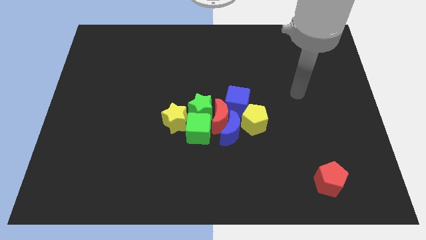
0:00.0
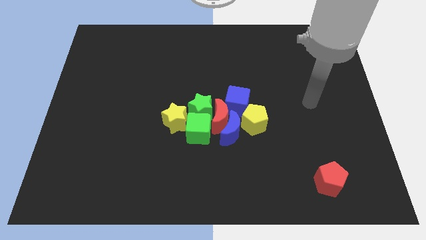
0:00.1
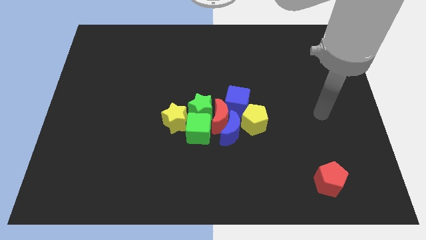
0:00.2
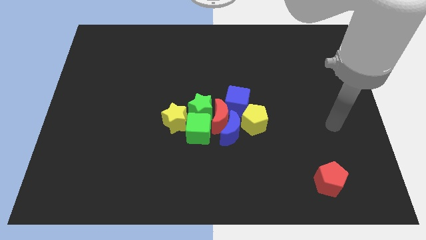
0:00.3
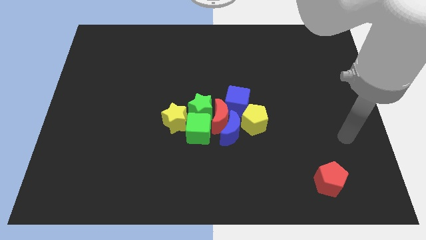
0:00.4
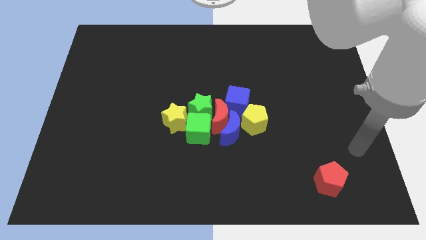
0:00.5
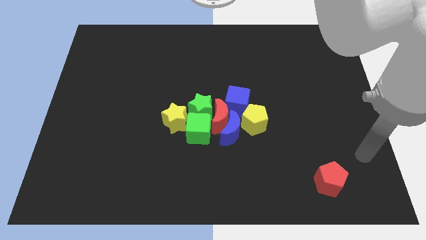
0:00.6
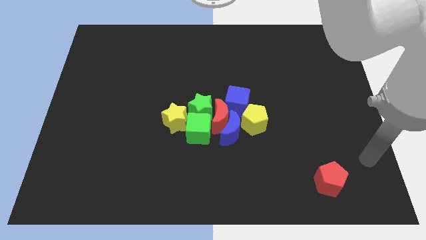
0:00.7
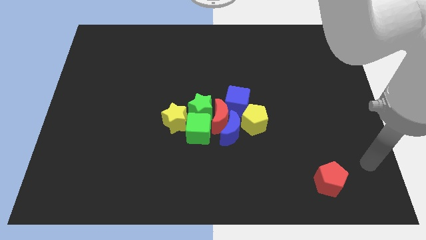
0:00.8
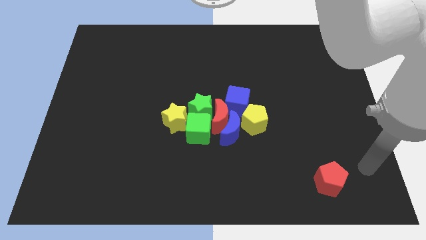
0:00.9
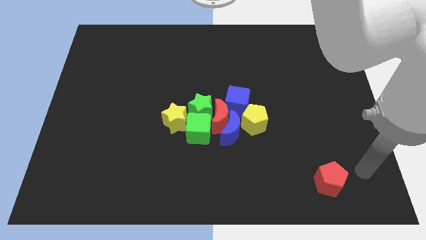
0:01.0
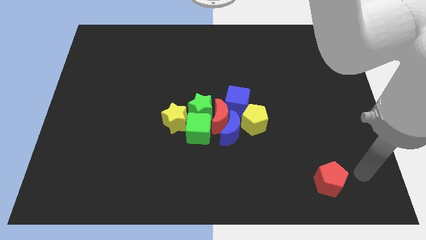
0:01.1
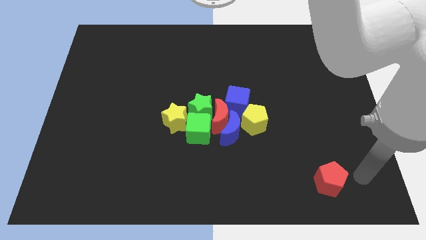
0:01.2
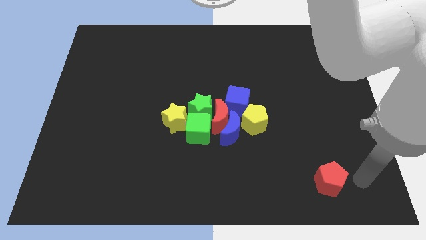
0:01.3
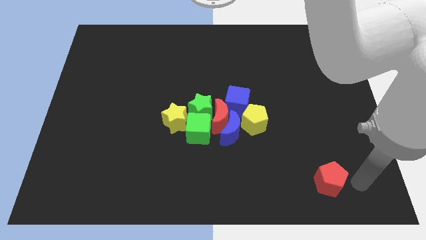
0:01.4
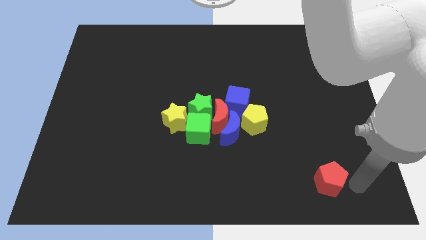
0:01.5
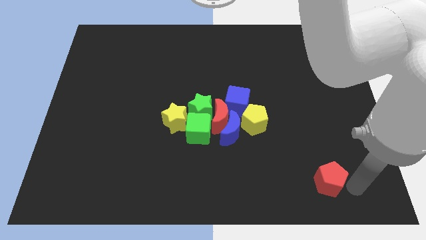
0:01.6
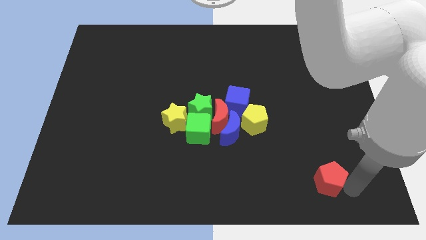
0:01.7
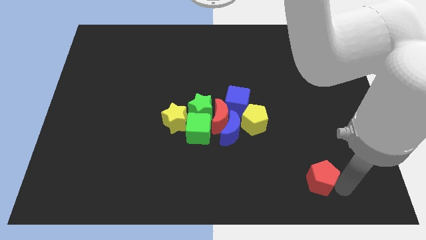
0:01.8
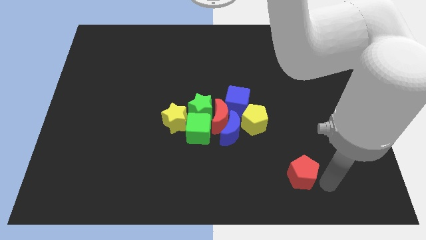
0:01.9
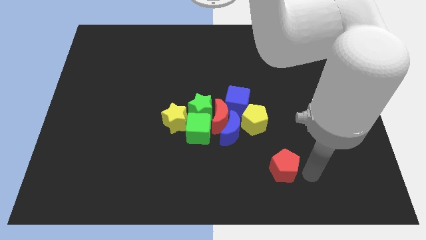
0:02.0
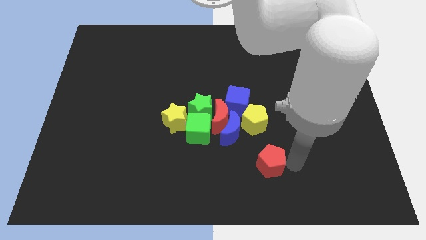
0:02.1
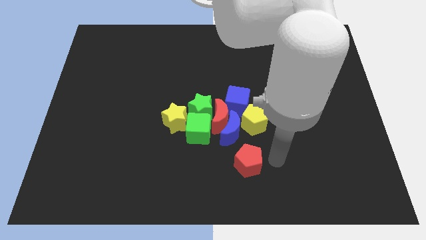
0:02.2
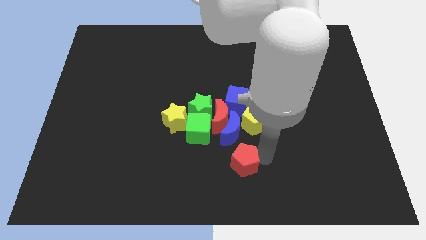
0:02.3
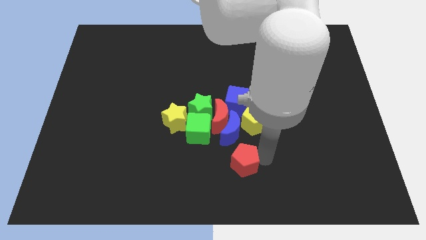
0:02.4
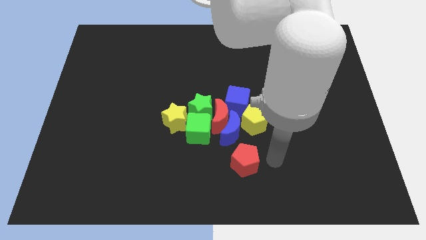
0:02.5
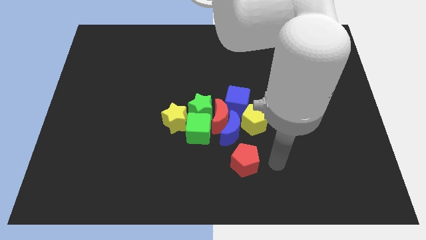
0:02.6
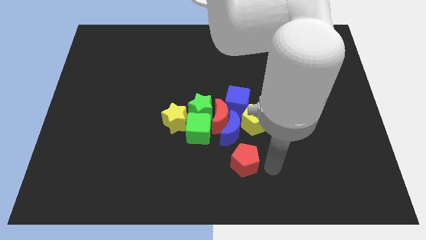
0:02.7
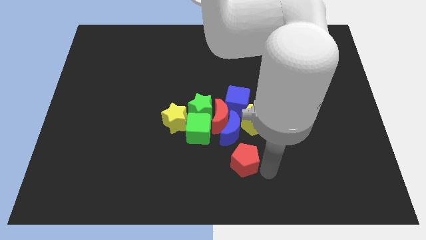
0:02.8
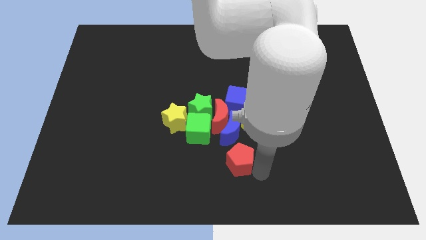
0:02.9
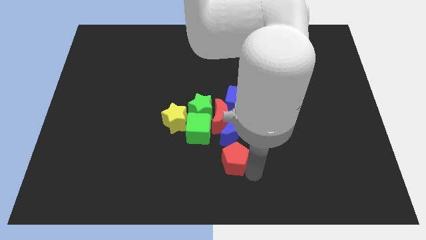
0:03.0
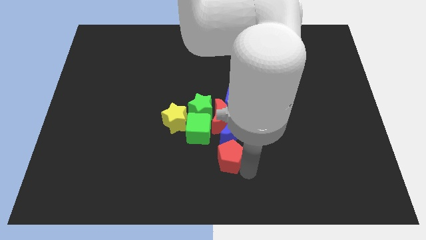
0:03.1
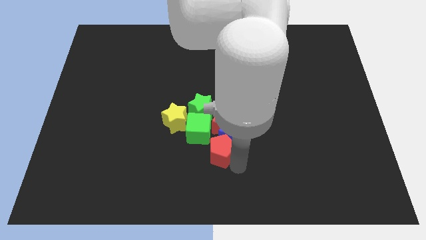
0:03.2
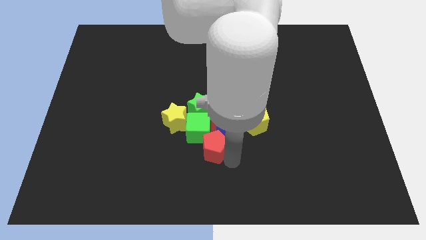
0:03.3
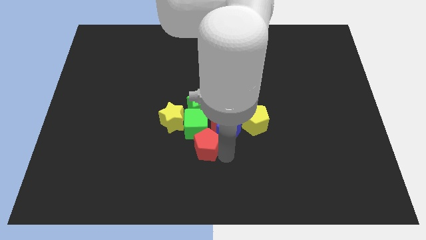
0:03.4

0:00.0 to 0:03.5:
slide the red pentagon into the bottom side of the green cube

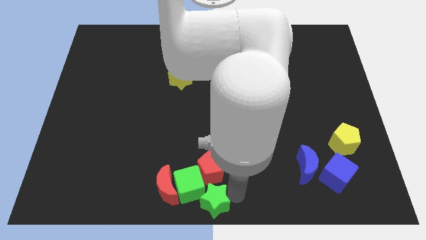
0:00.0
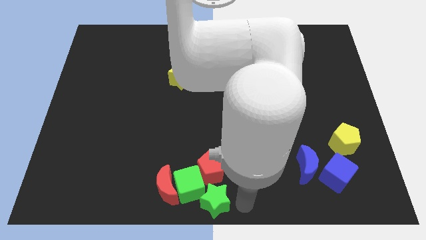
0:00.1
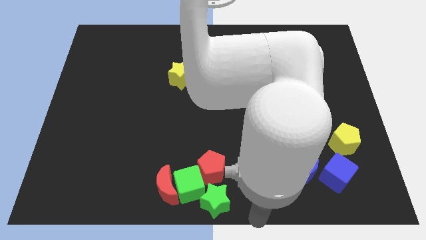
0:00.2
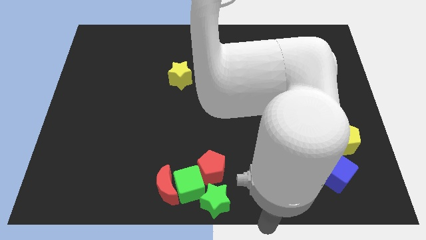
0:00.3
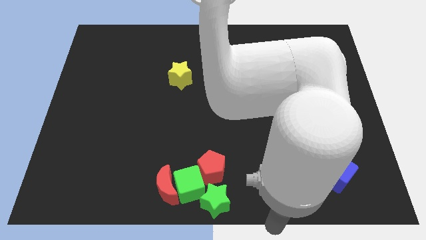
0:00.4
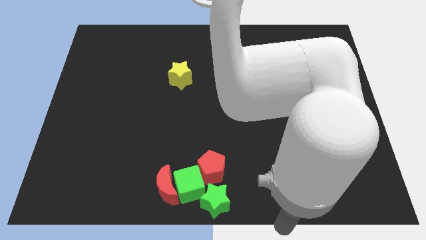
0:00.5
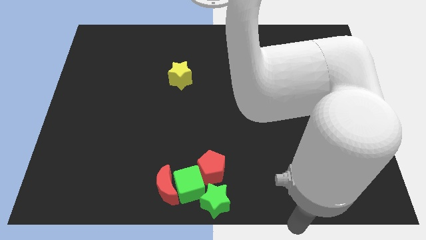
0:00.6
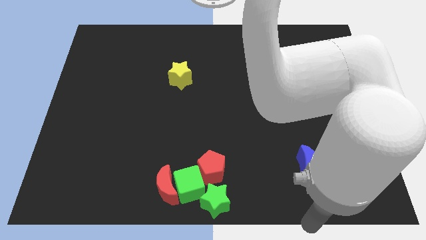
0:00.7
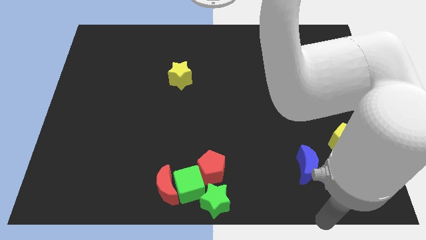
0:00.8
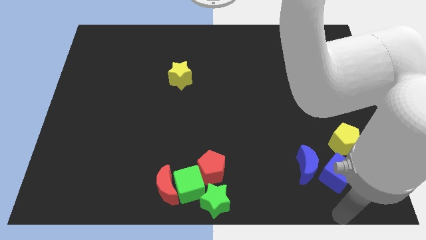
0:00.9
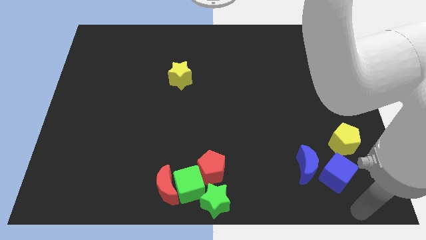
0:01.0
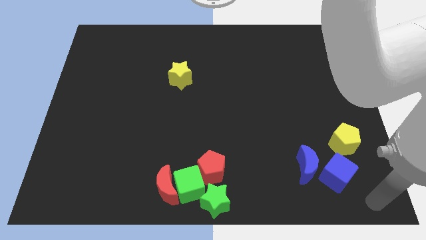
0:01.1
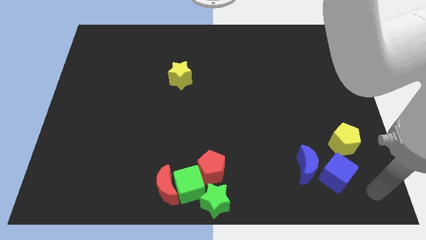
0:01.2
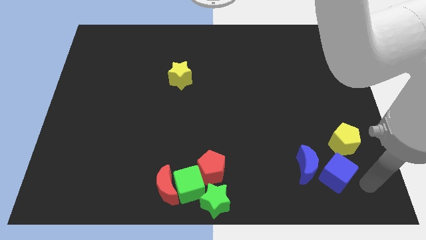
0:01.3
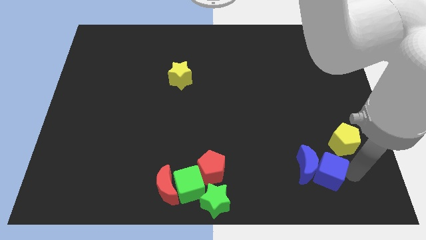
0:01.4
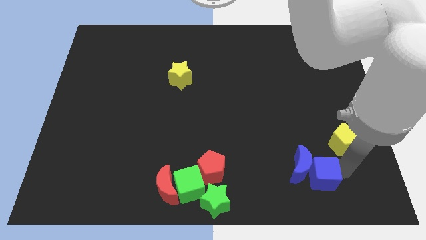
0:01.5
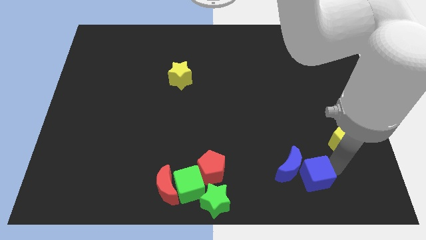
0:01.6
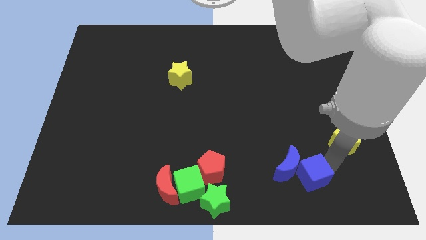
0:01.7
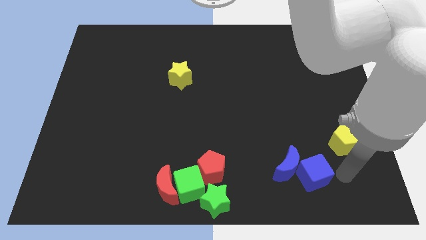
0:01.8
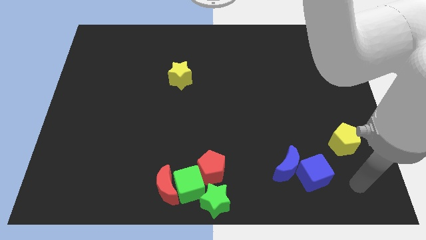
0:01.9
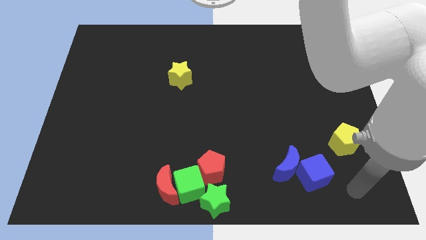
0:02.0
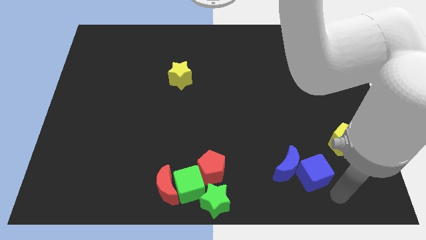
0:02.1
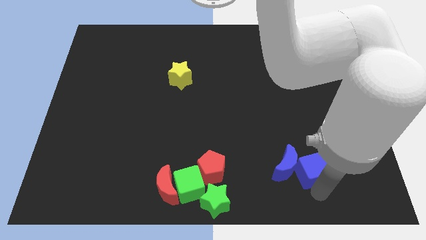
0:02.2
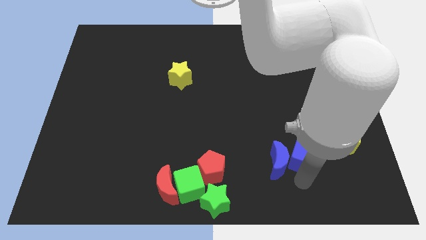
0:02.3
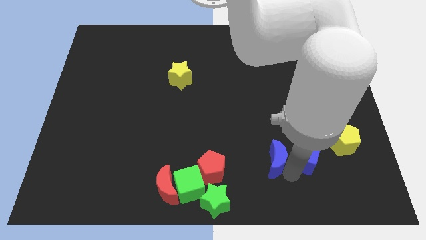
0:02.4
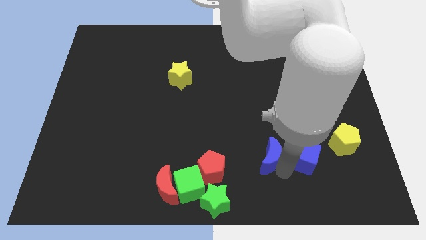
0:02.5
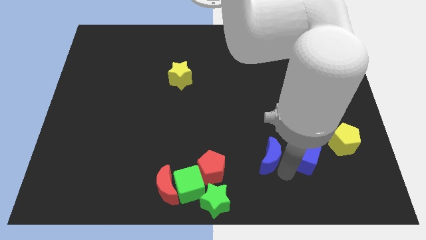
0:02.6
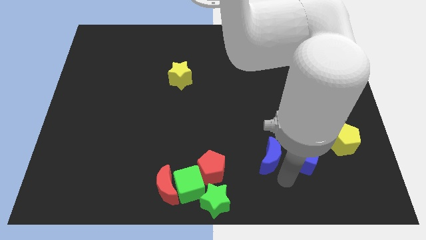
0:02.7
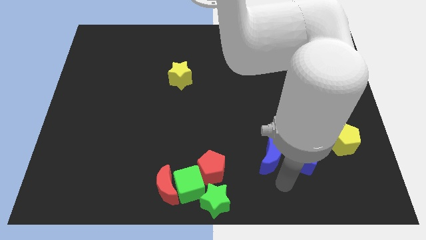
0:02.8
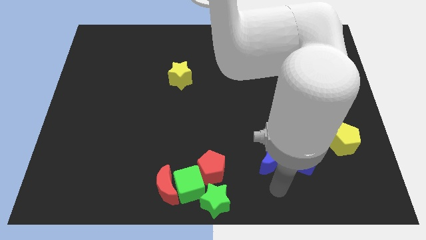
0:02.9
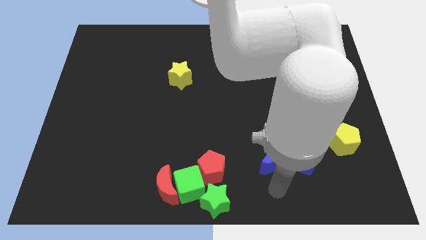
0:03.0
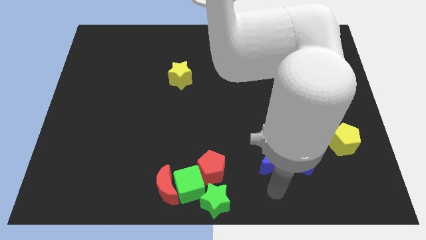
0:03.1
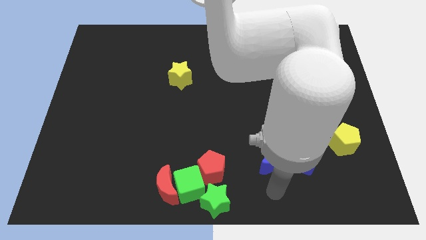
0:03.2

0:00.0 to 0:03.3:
push the blue cube and blue crescent towards the red pentagon

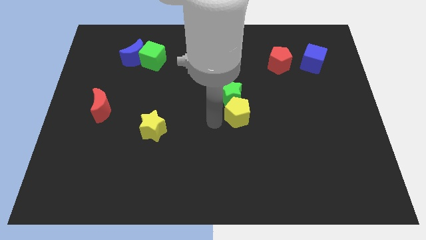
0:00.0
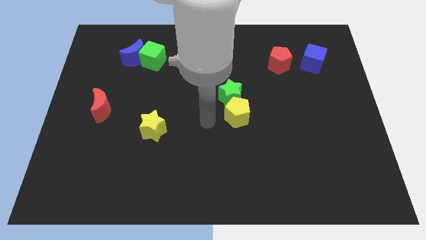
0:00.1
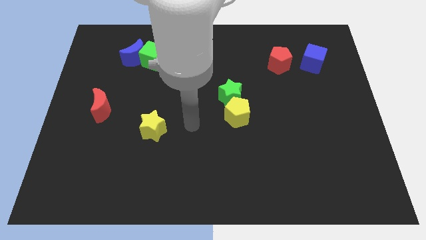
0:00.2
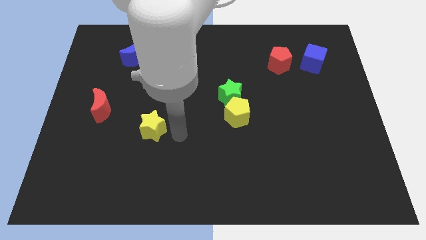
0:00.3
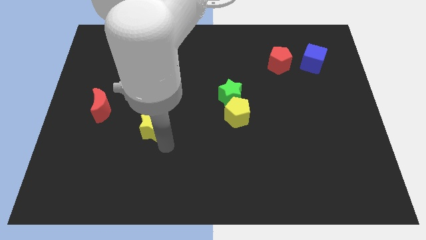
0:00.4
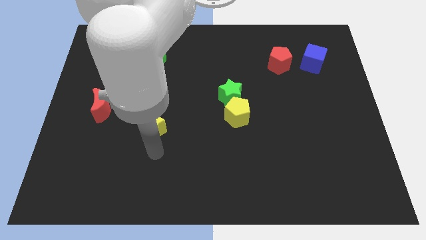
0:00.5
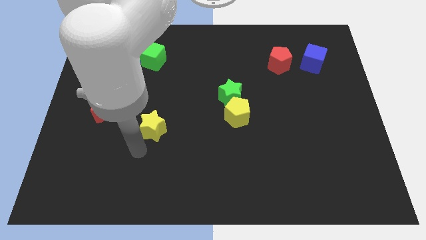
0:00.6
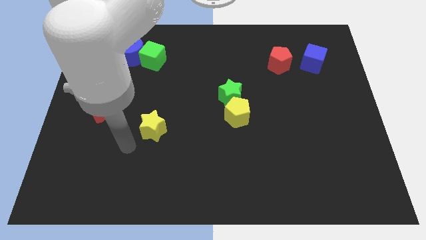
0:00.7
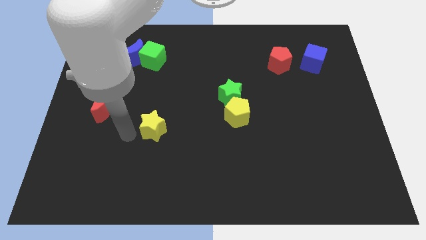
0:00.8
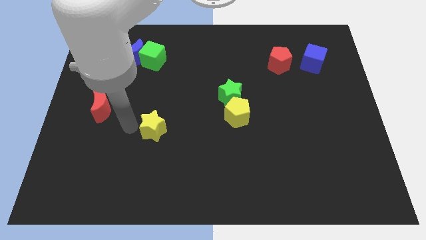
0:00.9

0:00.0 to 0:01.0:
move yourself to the left side of the yellow star

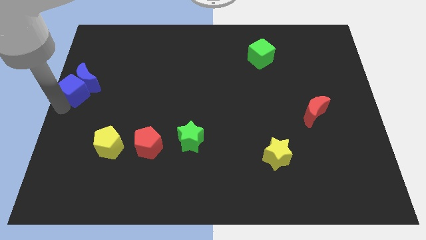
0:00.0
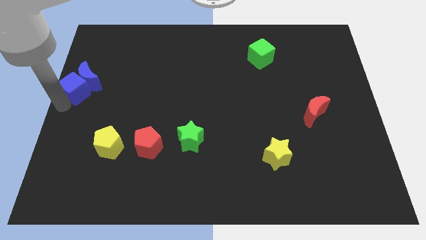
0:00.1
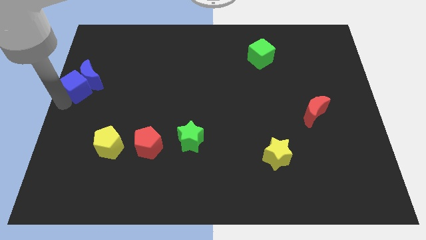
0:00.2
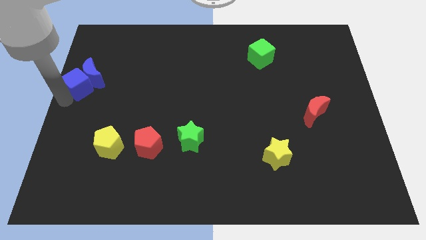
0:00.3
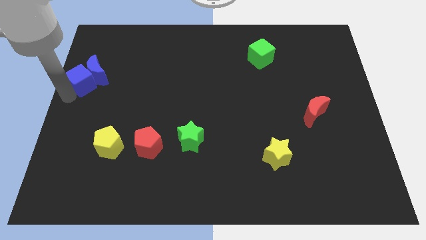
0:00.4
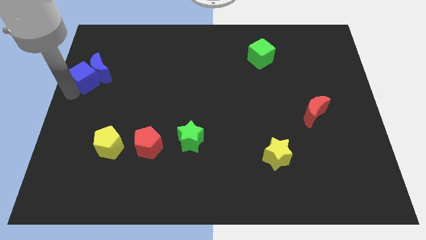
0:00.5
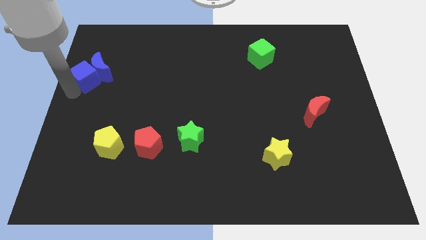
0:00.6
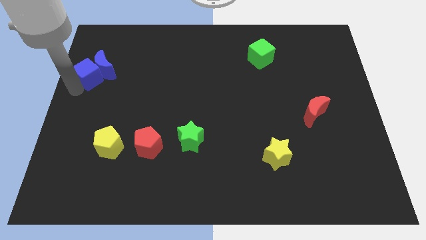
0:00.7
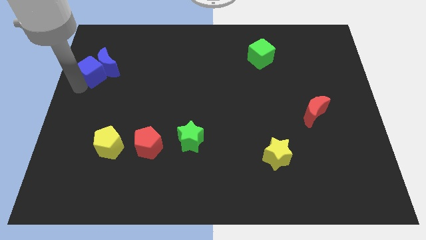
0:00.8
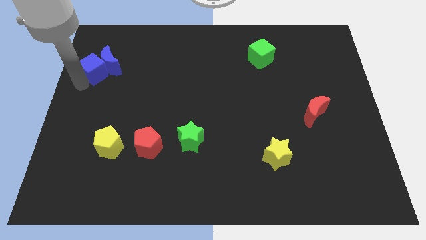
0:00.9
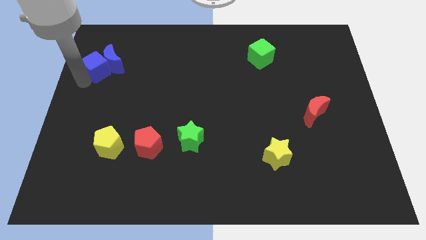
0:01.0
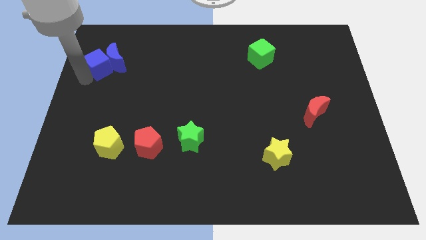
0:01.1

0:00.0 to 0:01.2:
place the blue blocks vertically above the yellow pentagon

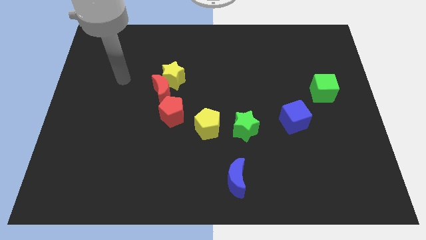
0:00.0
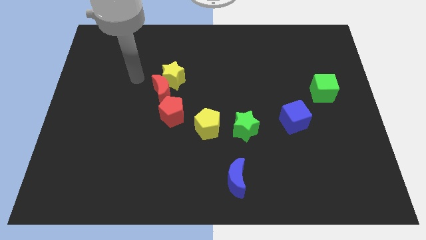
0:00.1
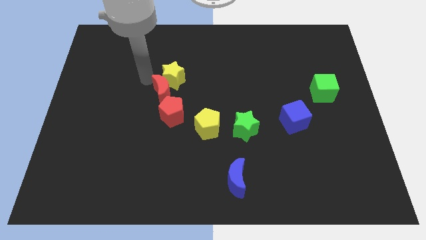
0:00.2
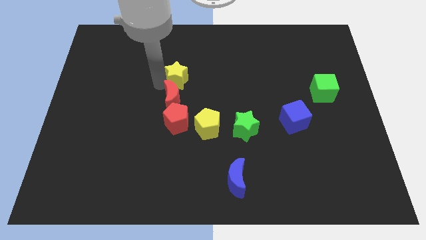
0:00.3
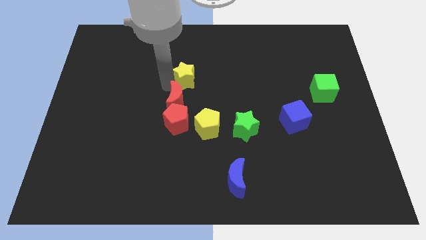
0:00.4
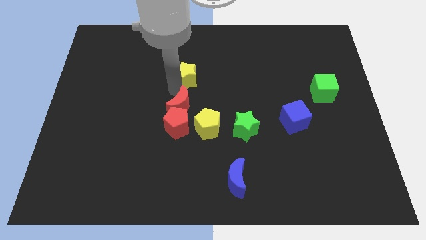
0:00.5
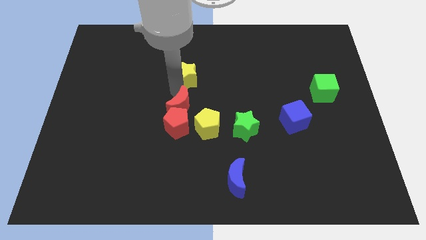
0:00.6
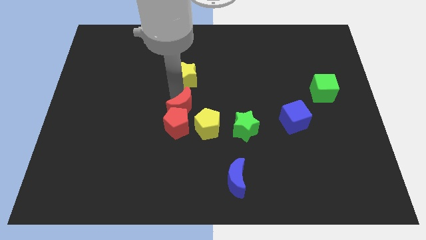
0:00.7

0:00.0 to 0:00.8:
move the red crescent to the bottom of the yellow star
